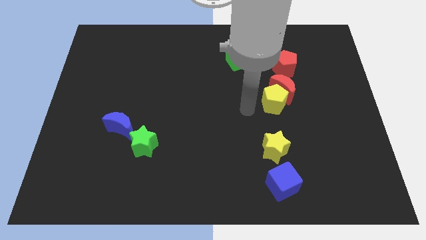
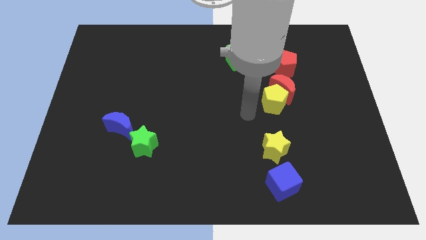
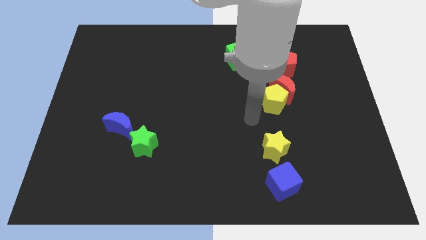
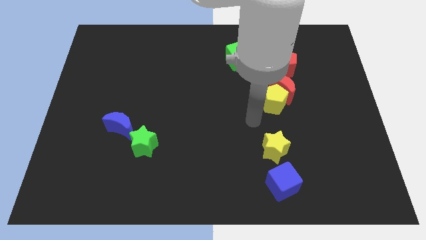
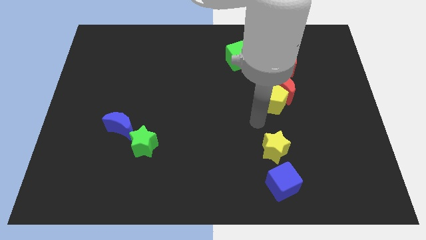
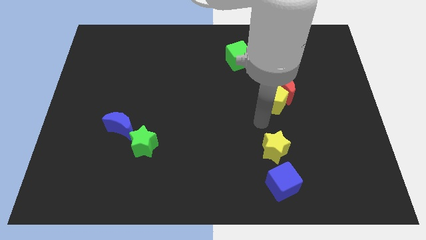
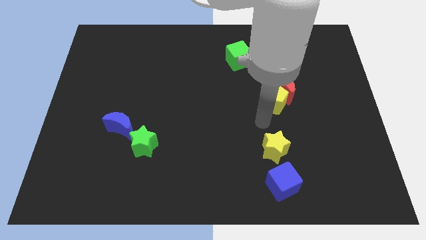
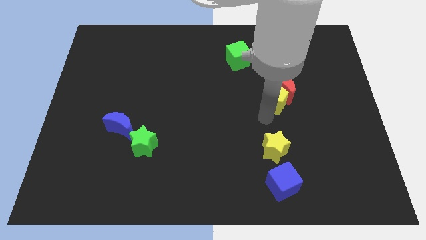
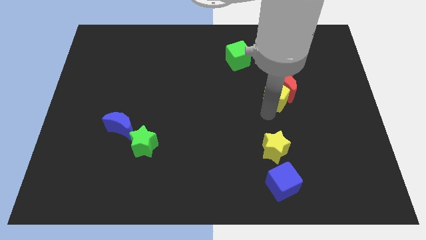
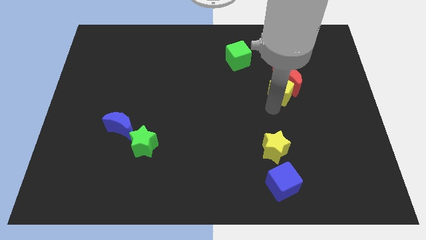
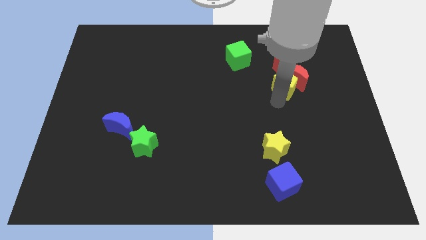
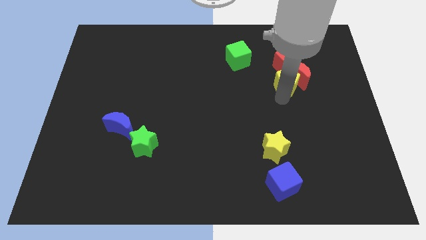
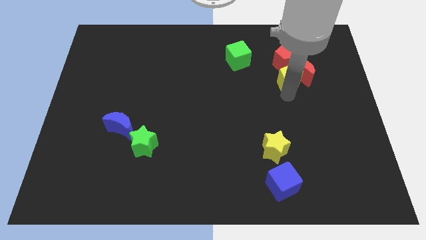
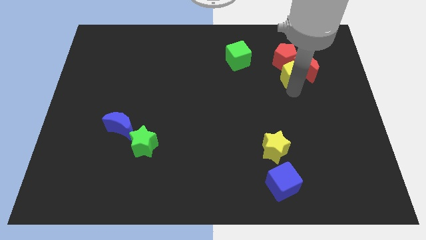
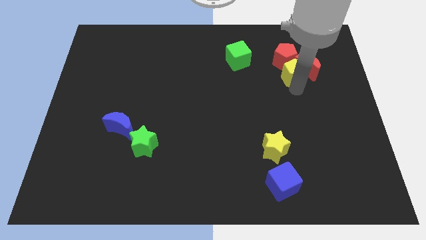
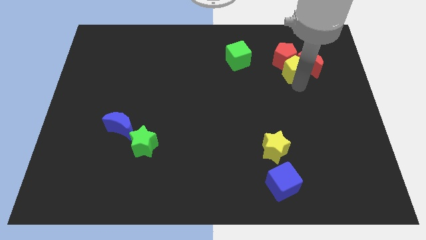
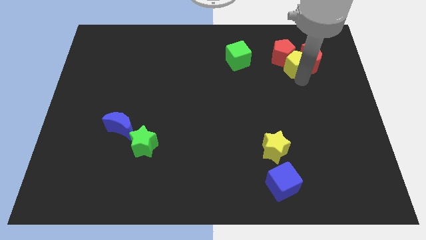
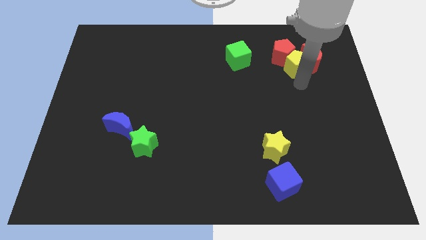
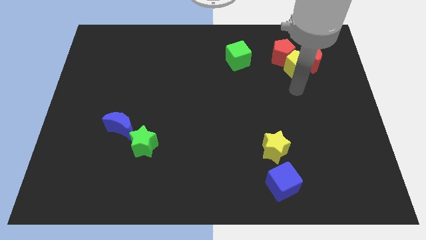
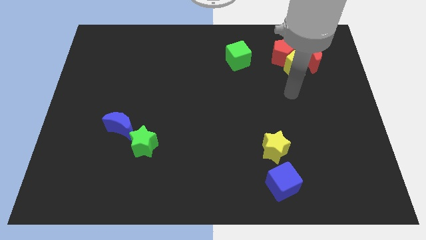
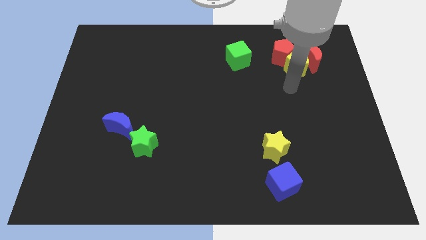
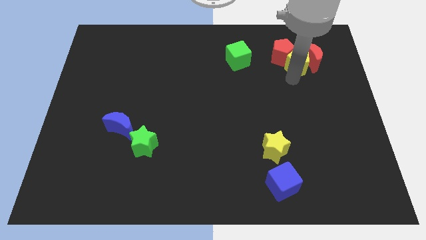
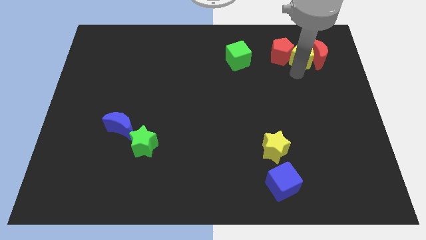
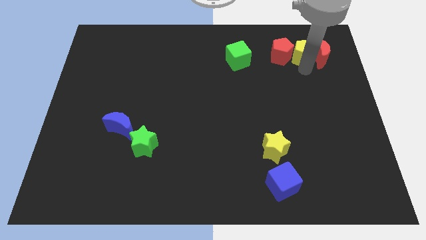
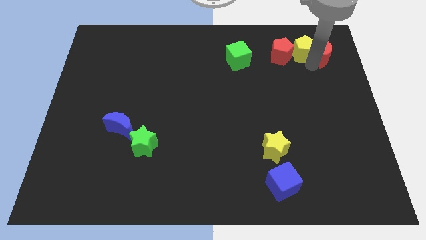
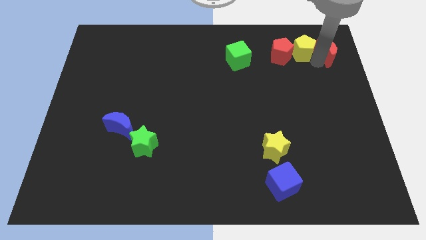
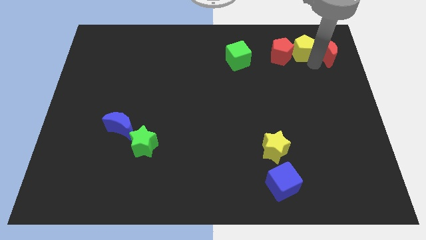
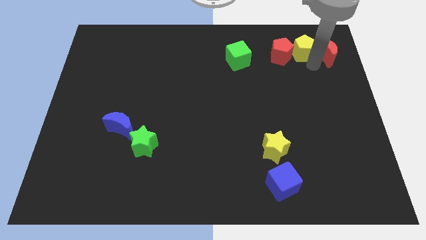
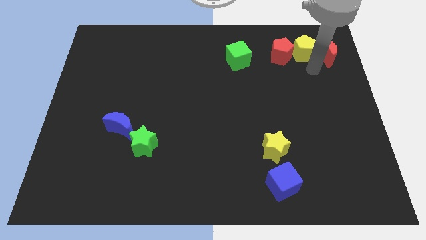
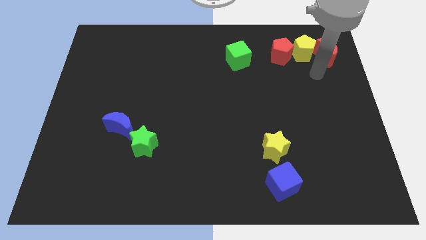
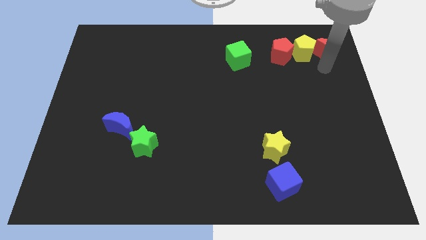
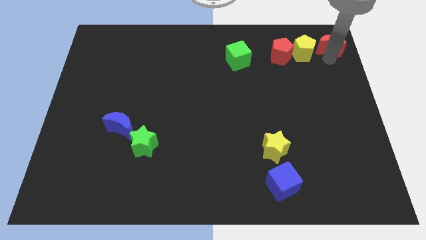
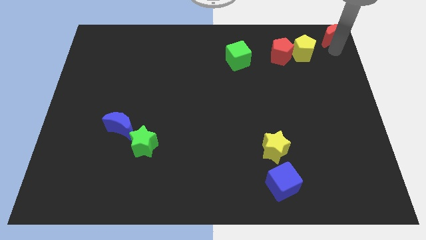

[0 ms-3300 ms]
put the yellow pentagon to the right of the red pentagon

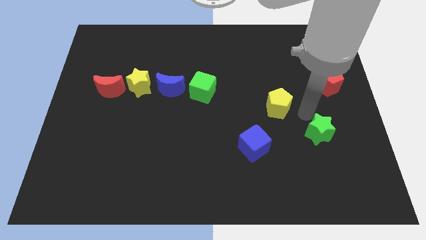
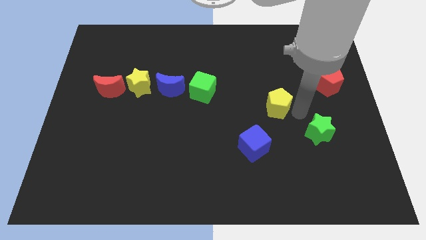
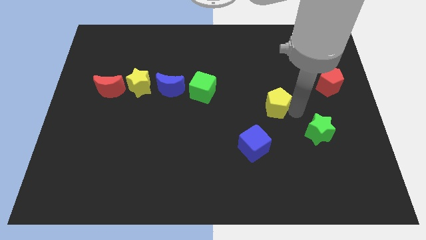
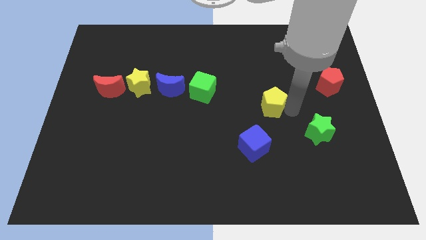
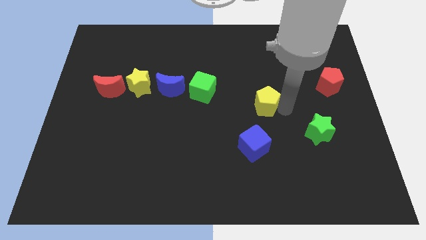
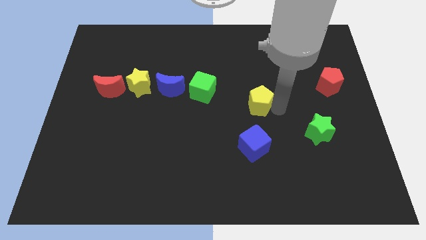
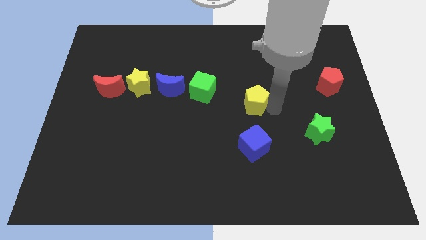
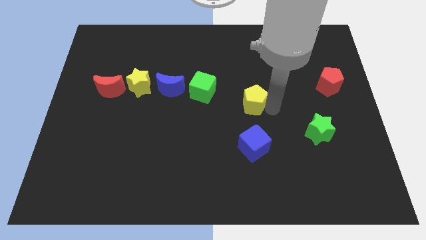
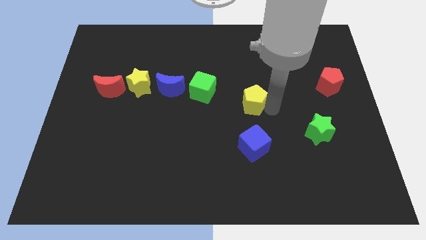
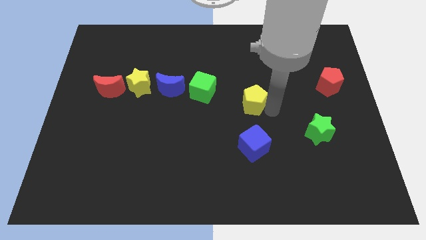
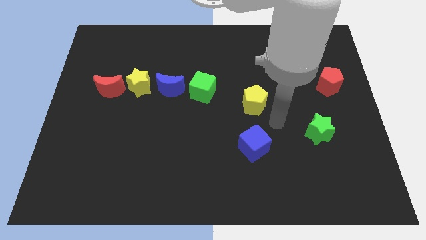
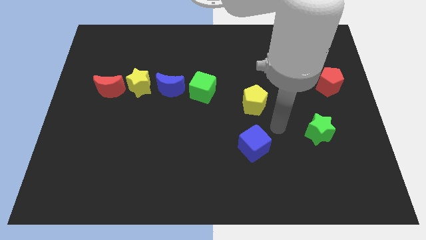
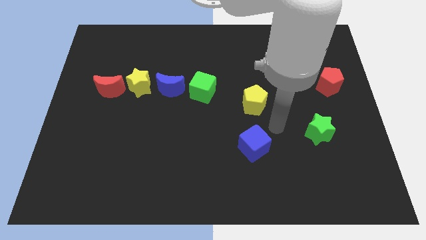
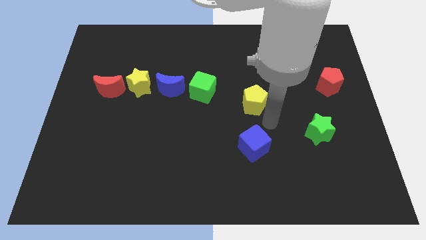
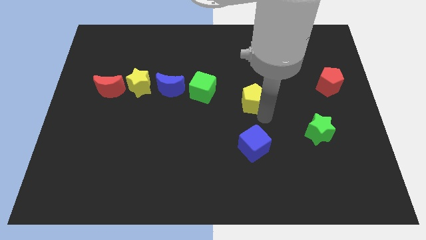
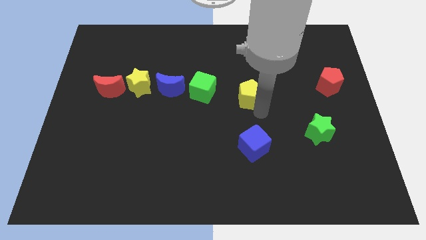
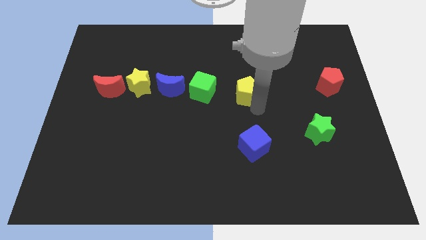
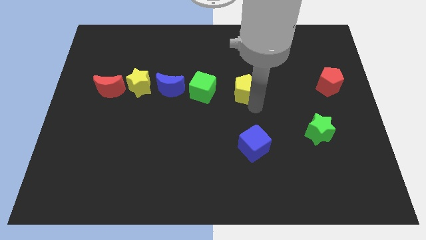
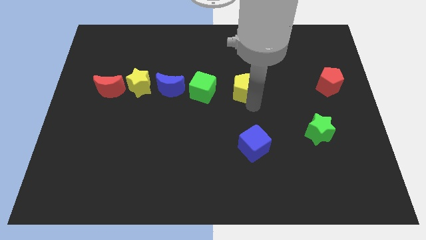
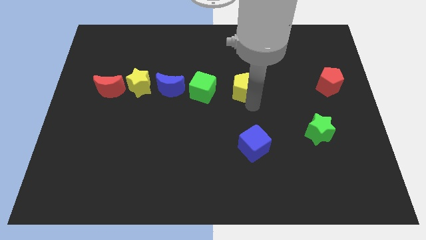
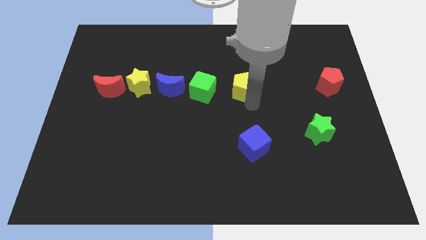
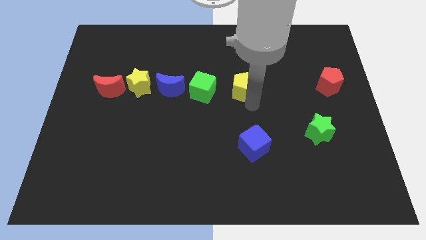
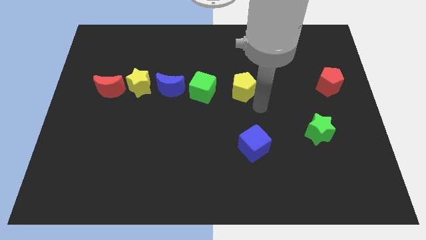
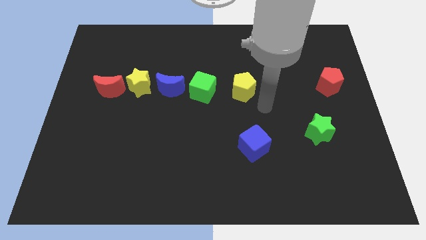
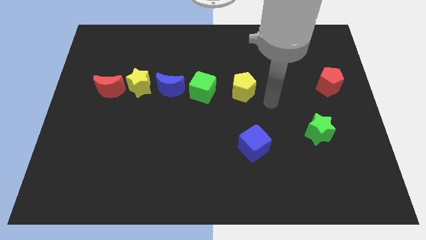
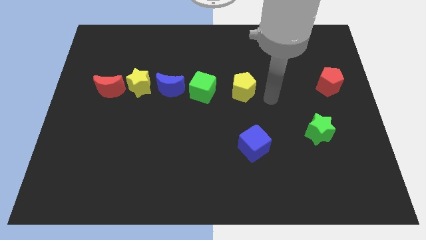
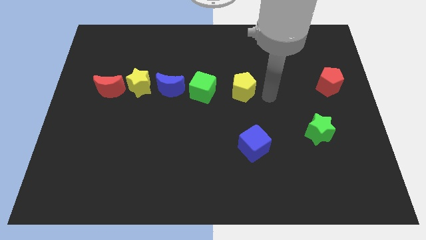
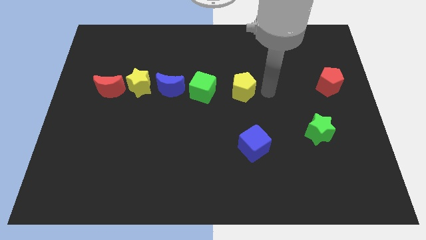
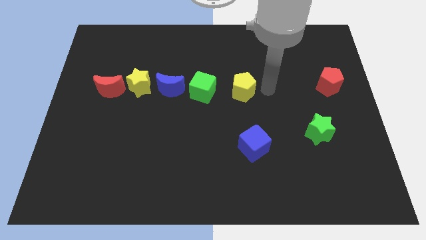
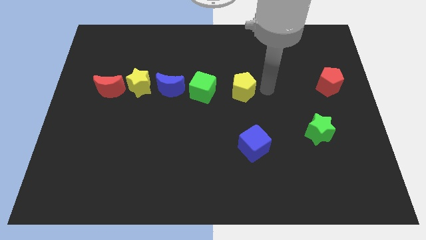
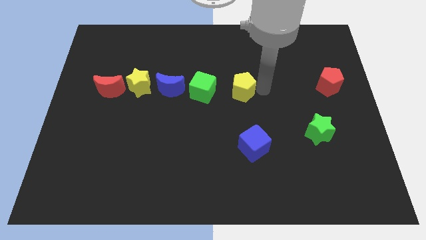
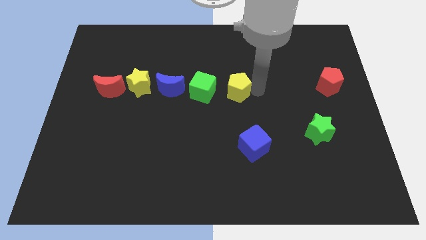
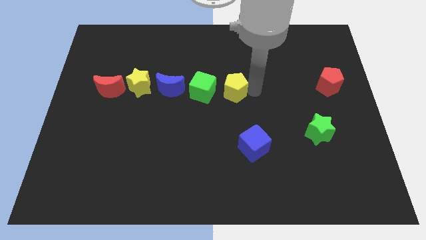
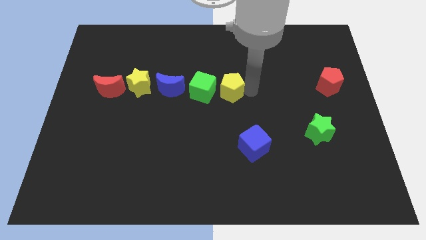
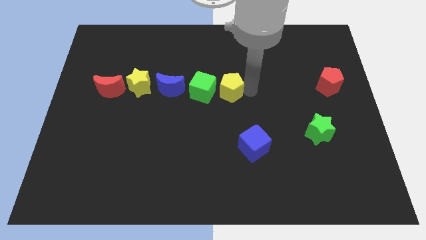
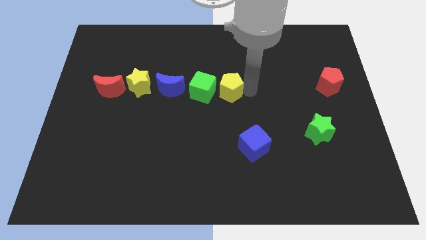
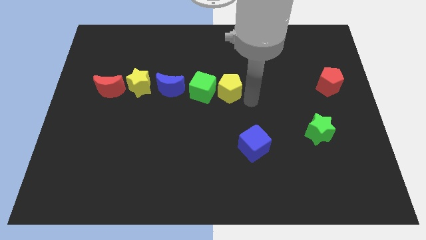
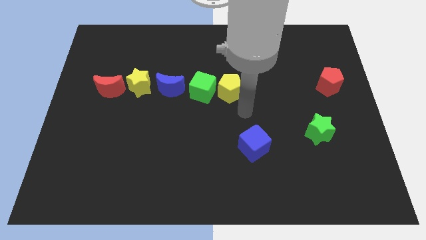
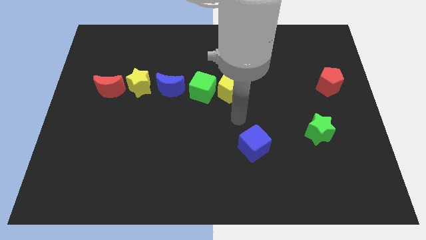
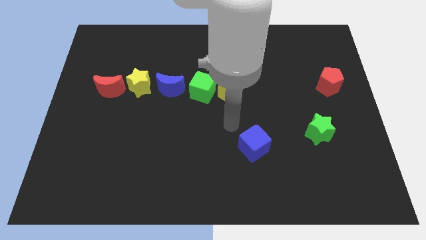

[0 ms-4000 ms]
place yellow pentagon to the right of green cube

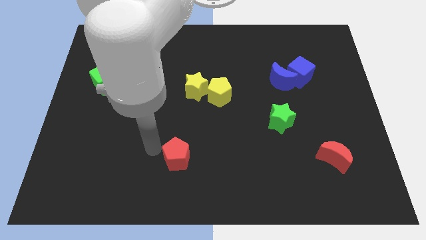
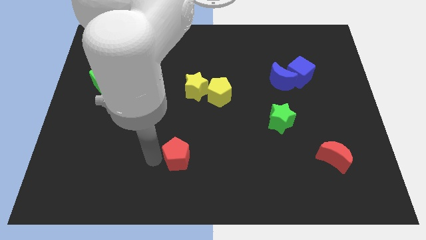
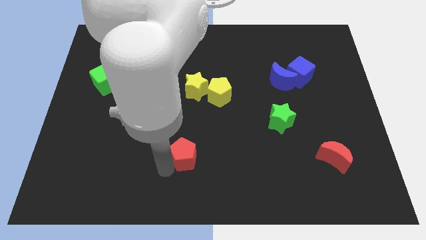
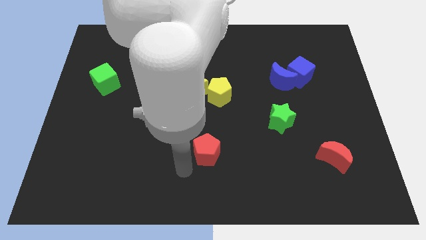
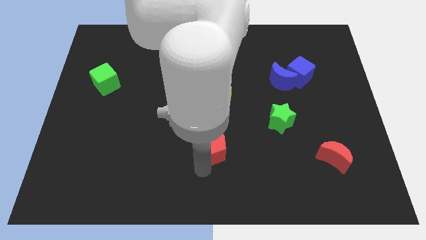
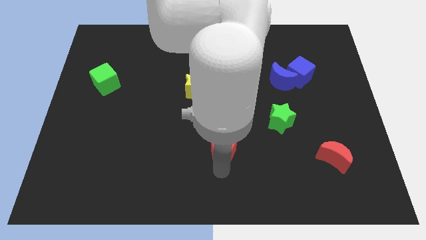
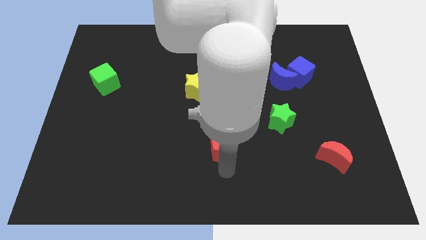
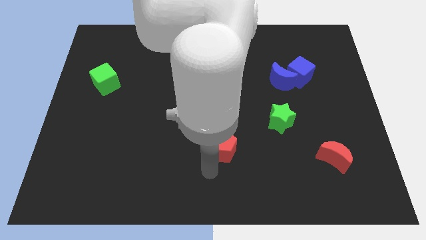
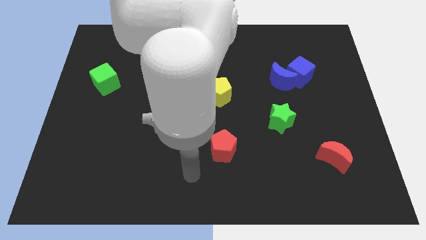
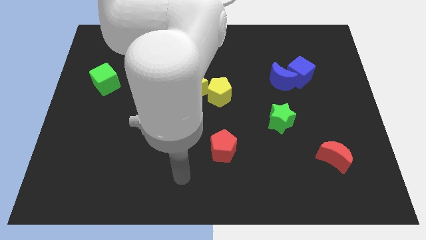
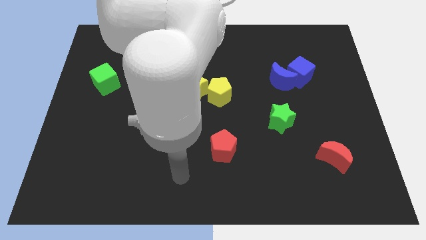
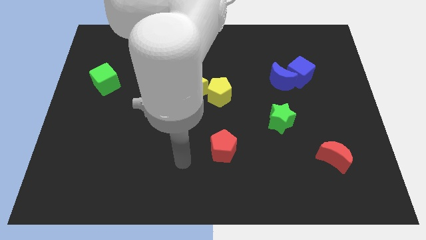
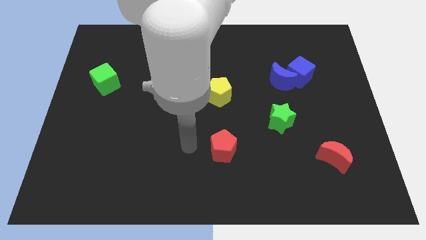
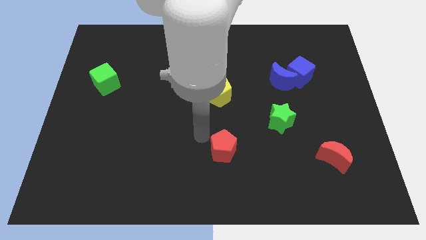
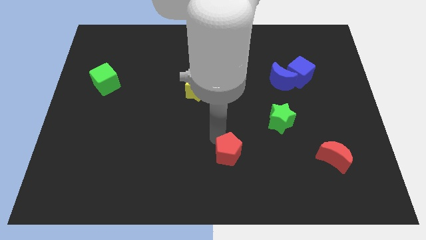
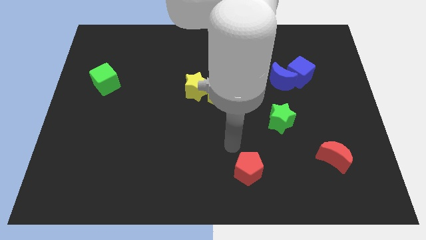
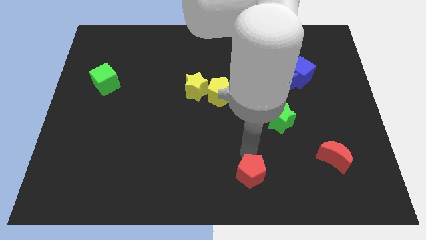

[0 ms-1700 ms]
move the red pentagon to the bottom center
